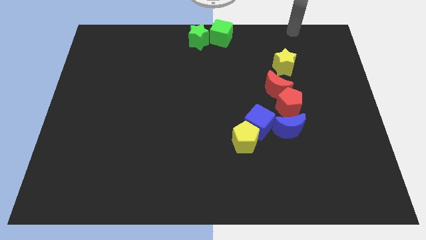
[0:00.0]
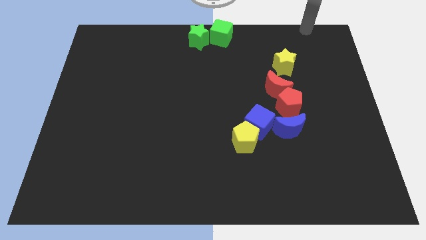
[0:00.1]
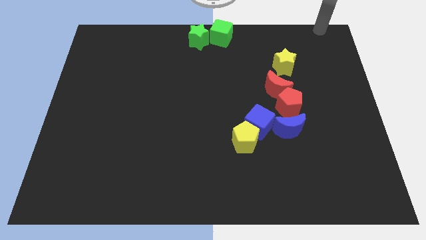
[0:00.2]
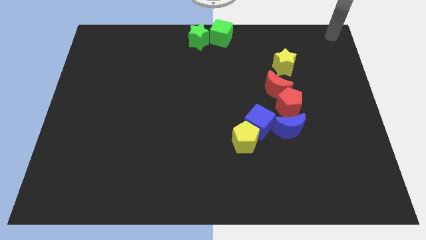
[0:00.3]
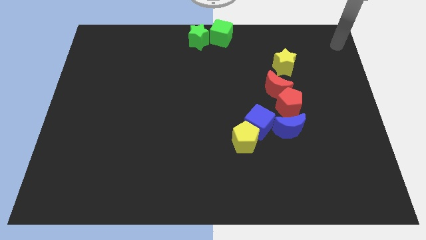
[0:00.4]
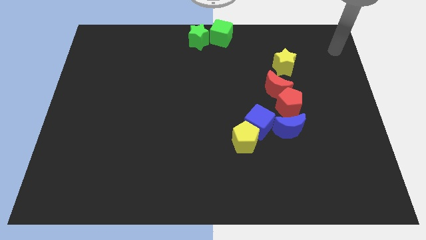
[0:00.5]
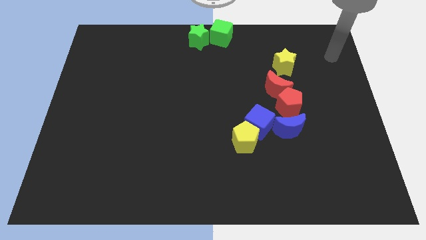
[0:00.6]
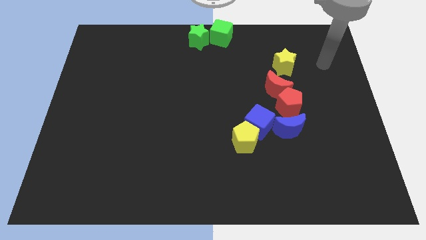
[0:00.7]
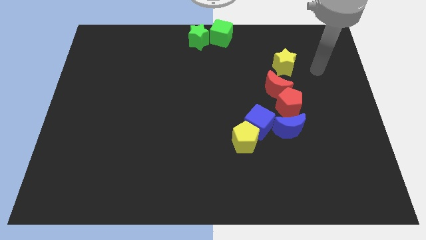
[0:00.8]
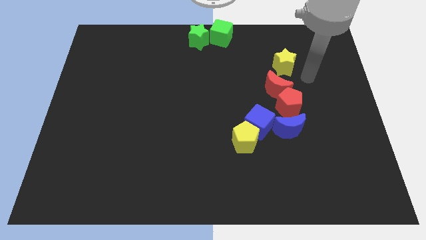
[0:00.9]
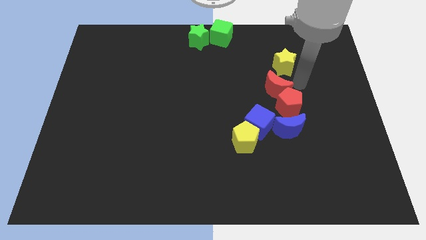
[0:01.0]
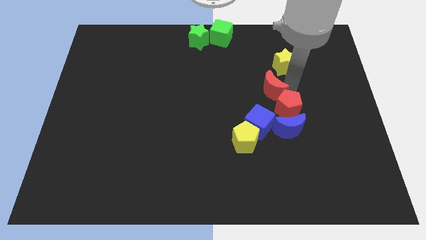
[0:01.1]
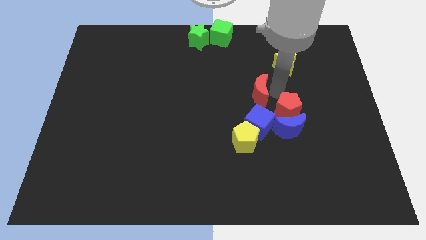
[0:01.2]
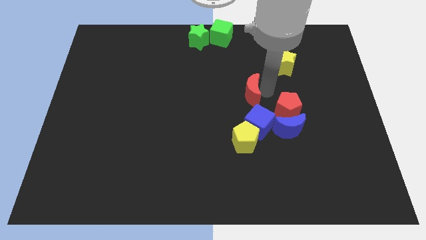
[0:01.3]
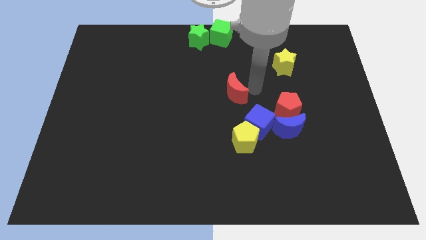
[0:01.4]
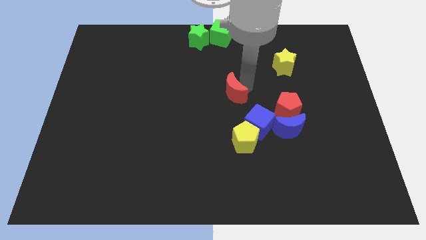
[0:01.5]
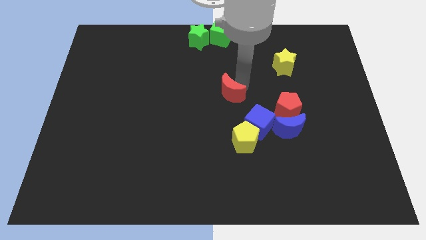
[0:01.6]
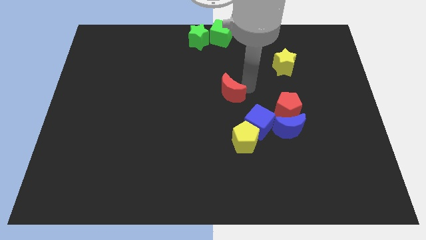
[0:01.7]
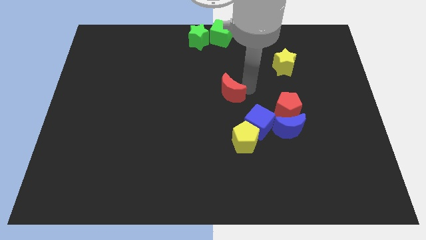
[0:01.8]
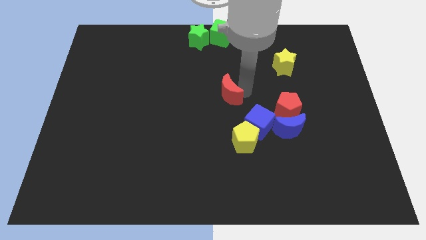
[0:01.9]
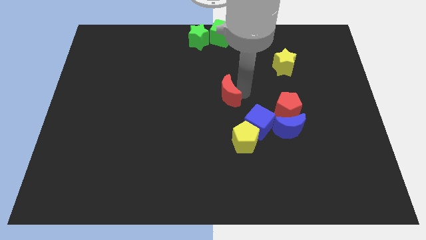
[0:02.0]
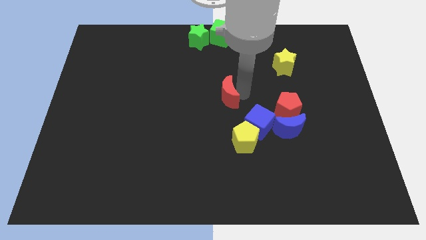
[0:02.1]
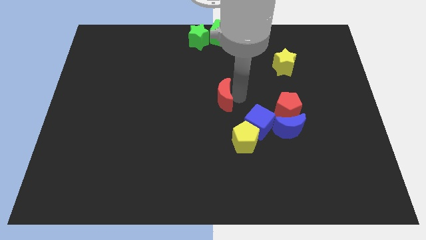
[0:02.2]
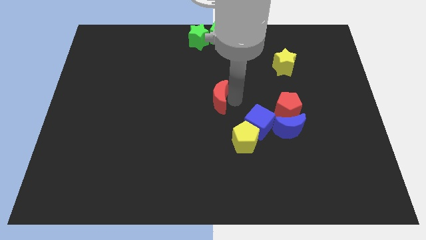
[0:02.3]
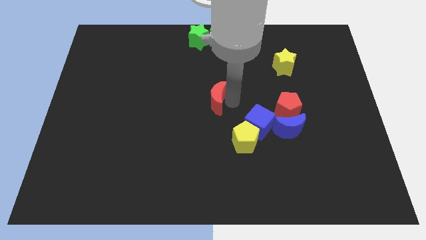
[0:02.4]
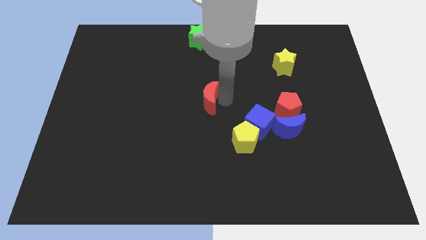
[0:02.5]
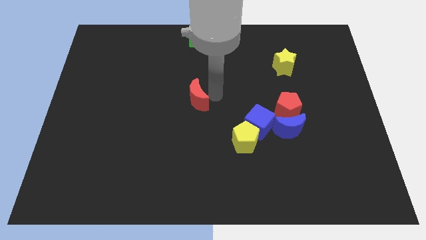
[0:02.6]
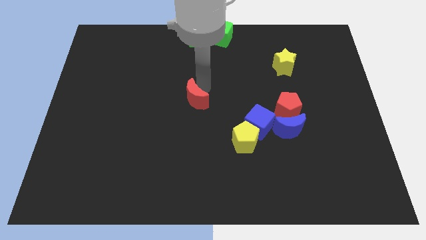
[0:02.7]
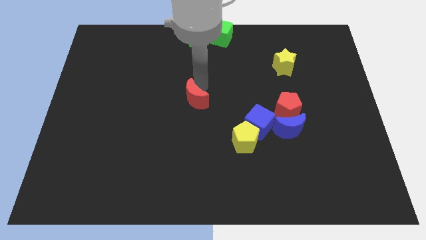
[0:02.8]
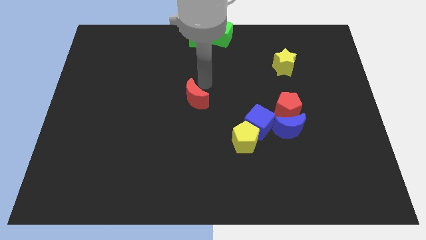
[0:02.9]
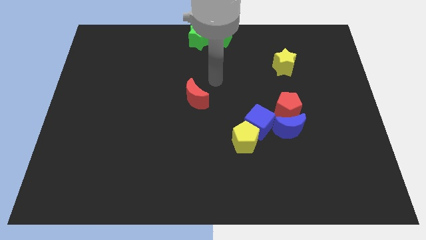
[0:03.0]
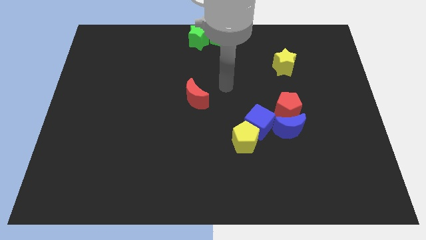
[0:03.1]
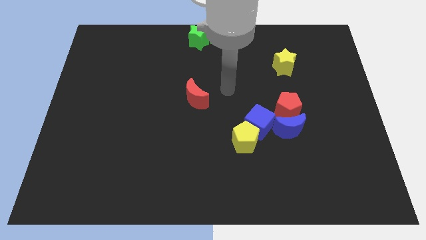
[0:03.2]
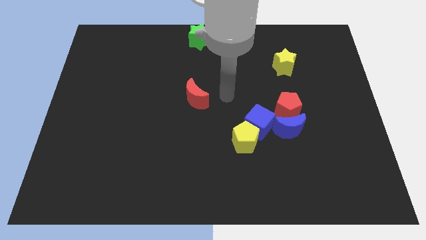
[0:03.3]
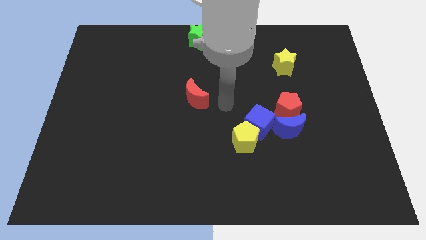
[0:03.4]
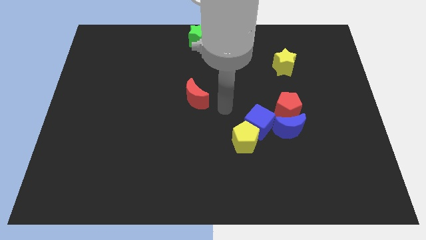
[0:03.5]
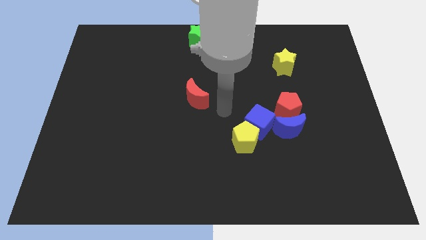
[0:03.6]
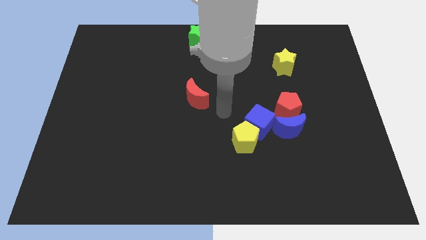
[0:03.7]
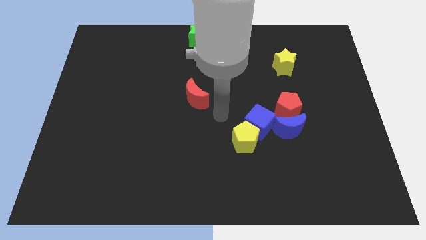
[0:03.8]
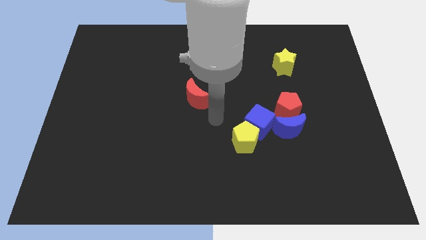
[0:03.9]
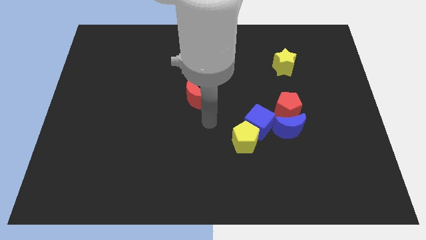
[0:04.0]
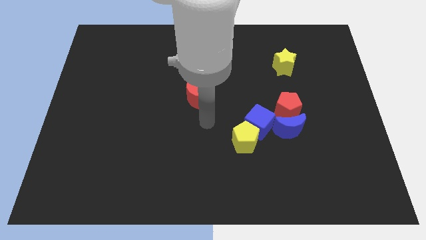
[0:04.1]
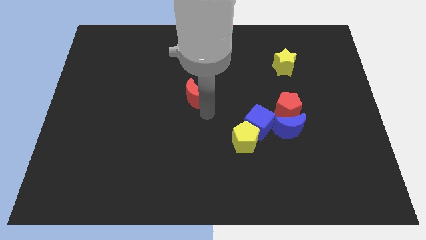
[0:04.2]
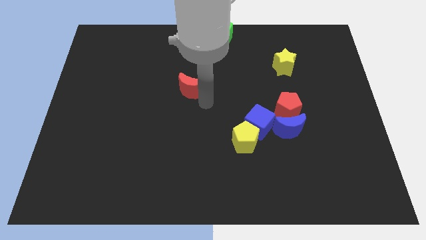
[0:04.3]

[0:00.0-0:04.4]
move the red crescent towards right

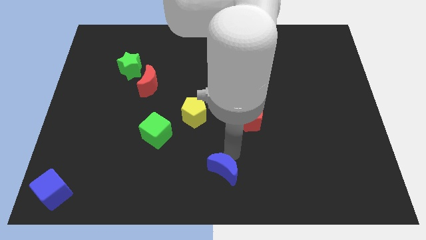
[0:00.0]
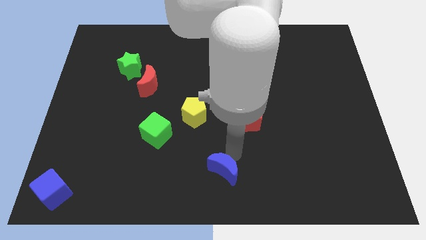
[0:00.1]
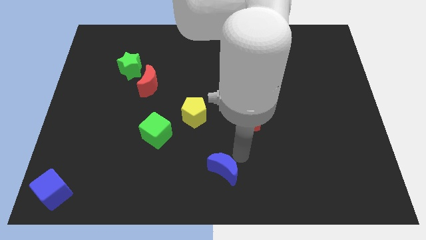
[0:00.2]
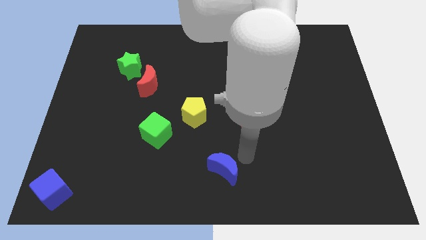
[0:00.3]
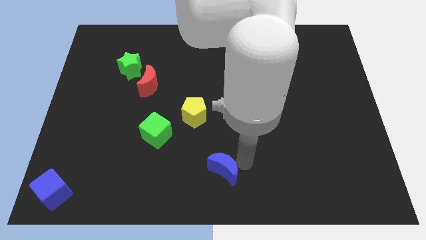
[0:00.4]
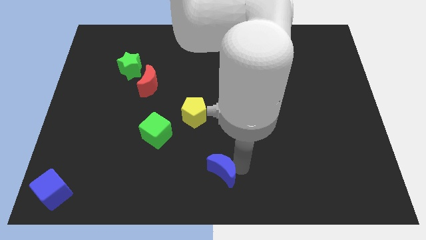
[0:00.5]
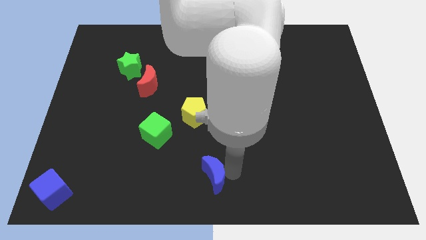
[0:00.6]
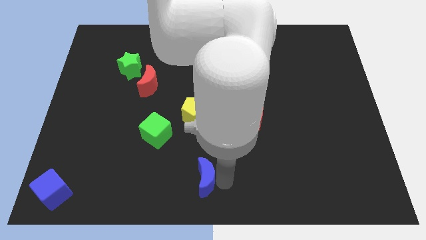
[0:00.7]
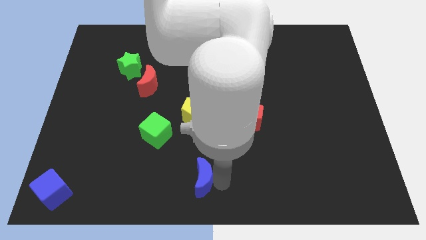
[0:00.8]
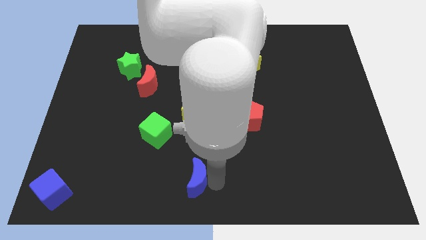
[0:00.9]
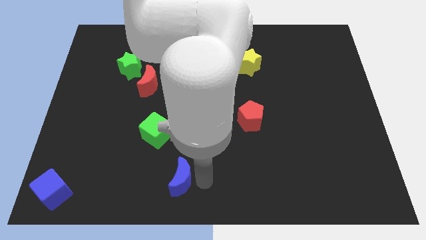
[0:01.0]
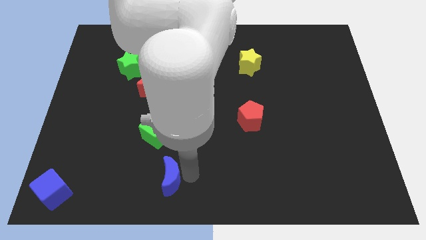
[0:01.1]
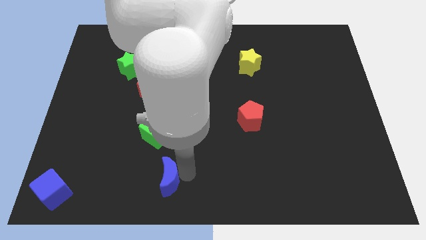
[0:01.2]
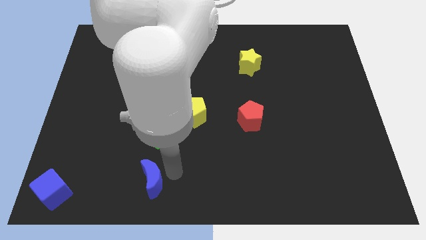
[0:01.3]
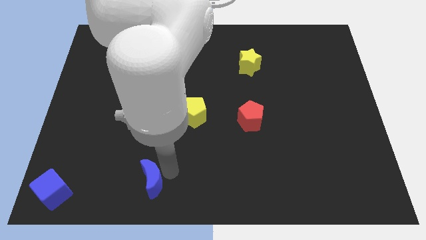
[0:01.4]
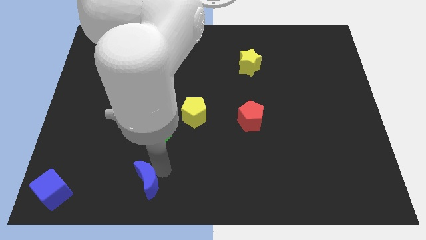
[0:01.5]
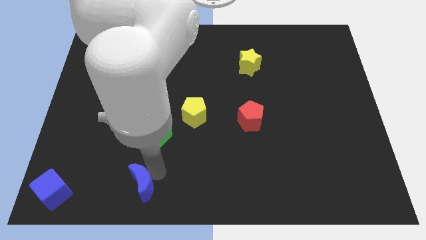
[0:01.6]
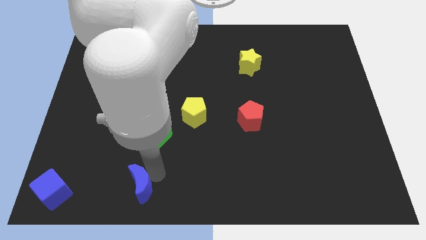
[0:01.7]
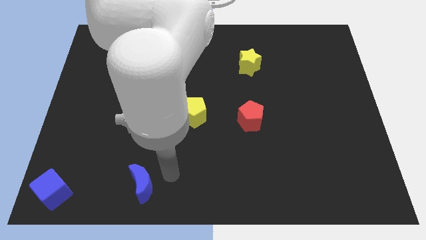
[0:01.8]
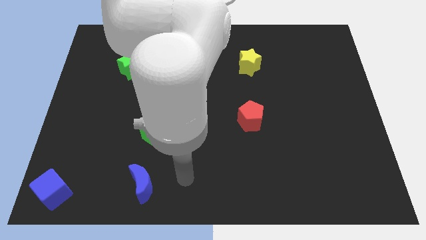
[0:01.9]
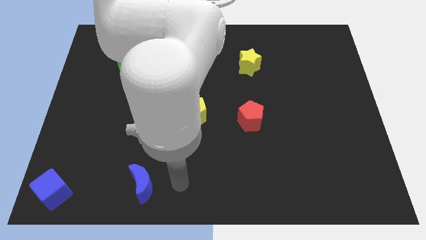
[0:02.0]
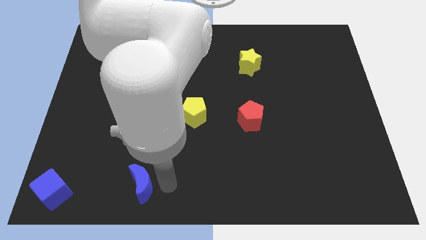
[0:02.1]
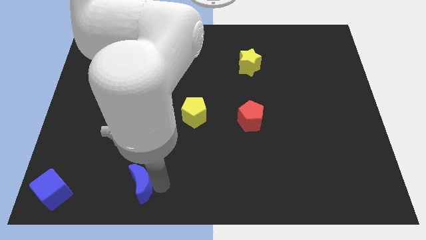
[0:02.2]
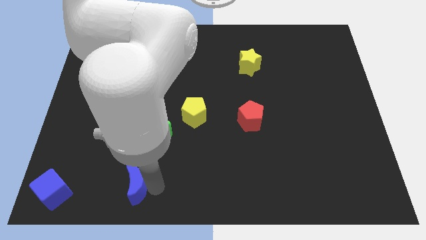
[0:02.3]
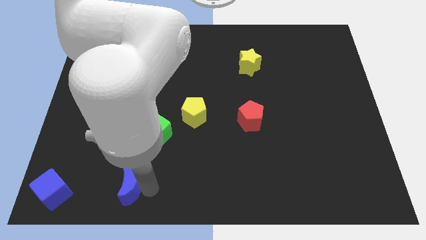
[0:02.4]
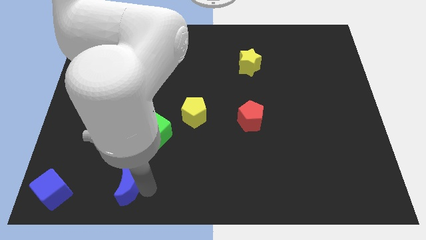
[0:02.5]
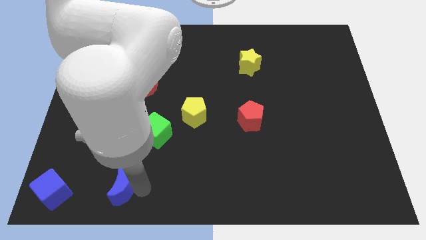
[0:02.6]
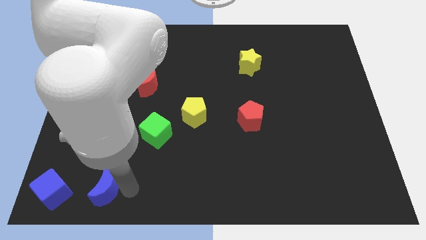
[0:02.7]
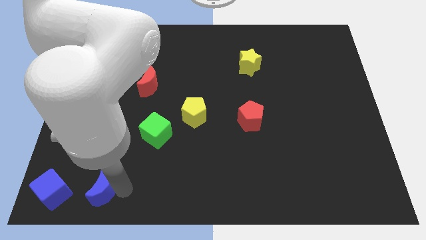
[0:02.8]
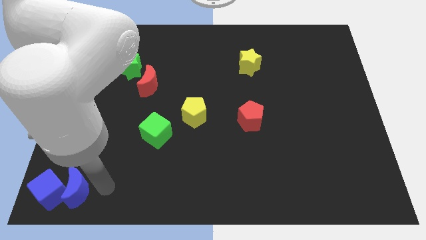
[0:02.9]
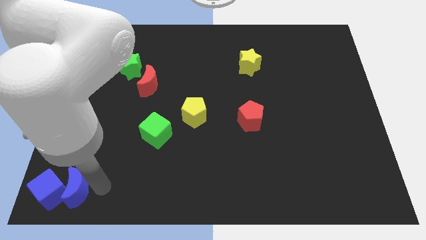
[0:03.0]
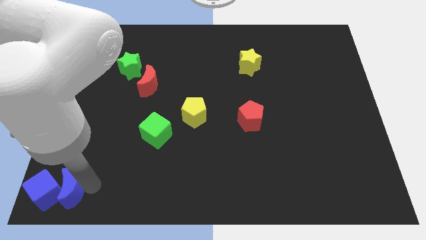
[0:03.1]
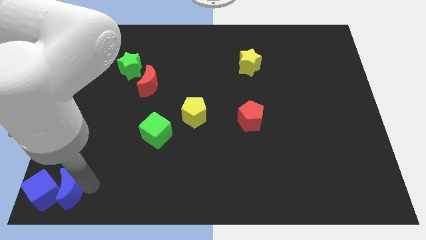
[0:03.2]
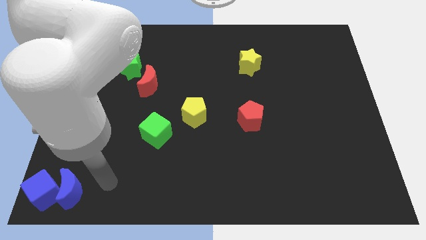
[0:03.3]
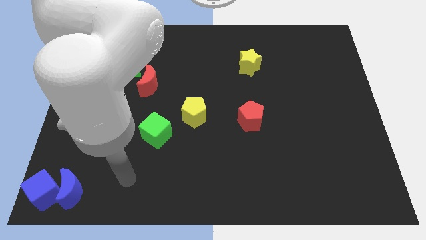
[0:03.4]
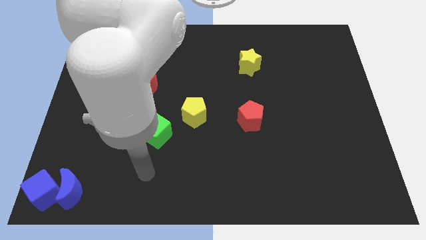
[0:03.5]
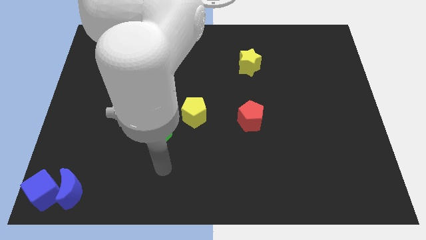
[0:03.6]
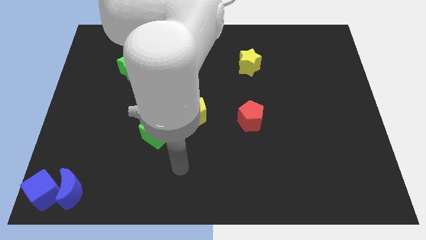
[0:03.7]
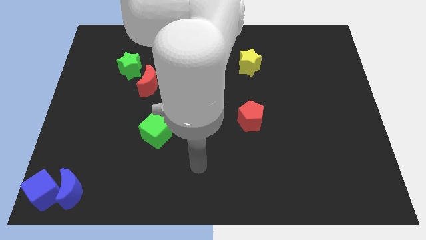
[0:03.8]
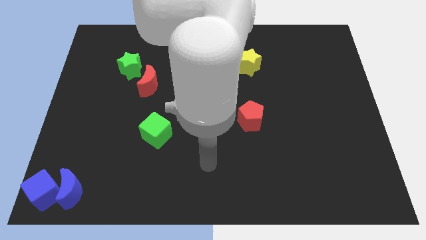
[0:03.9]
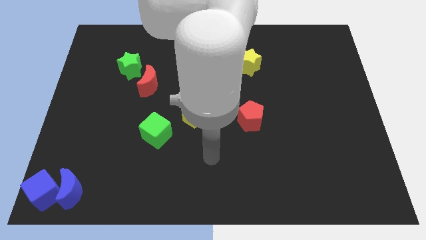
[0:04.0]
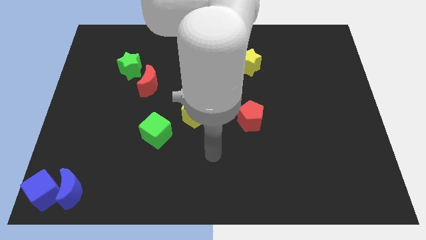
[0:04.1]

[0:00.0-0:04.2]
move blue moon close to the blue cube

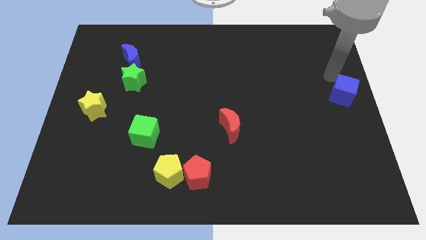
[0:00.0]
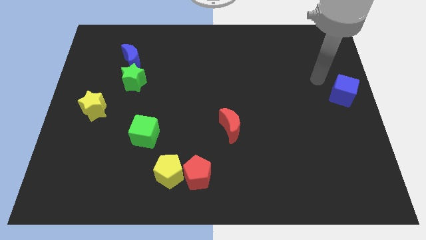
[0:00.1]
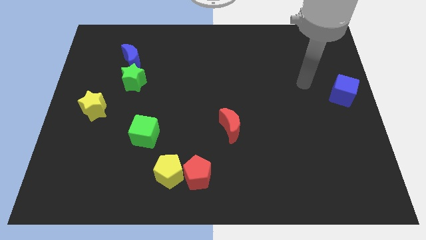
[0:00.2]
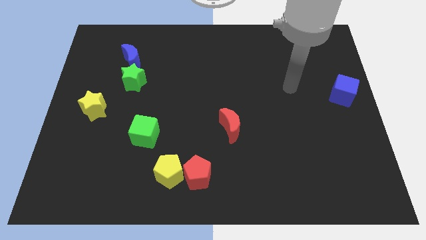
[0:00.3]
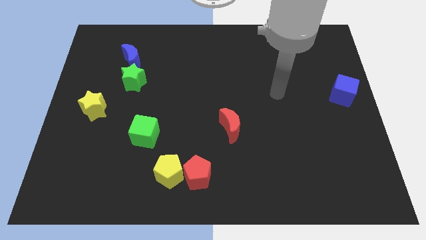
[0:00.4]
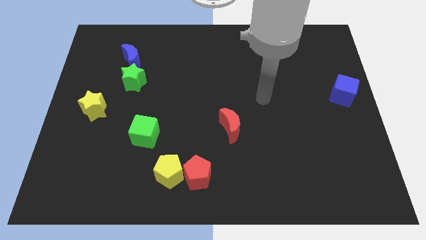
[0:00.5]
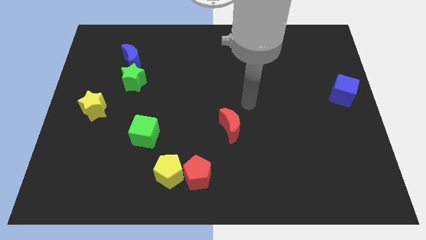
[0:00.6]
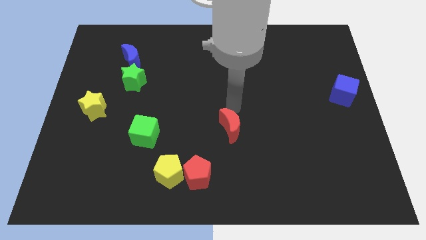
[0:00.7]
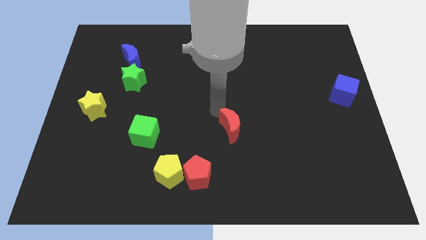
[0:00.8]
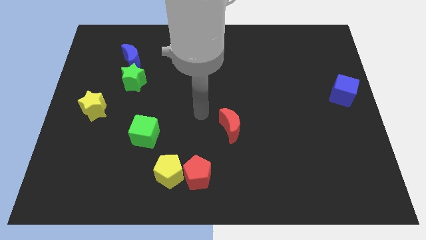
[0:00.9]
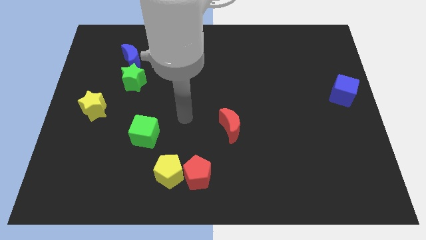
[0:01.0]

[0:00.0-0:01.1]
move arm way from blue cube
